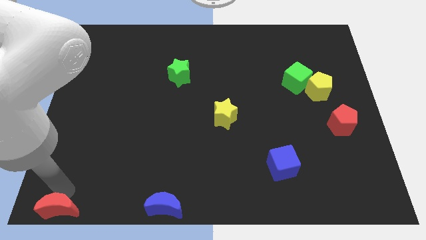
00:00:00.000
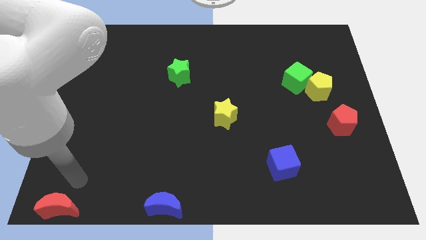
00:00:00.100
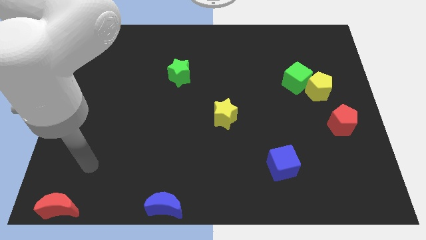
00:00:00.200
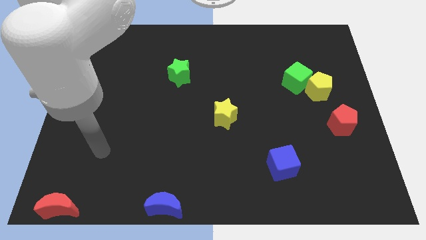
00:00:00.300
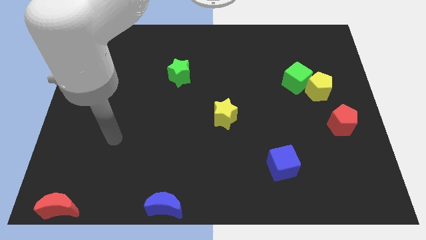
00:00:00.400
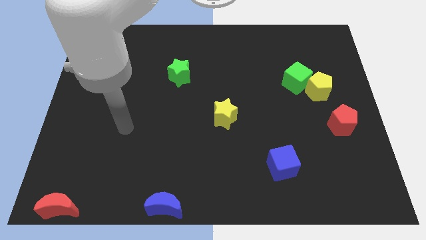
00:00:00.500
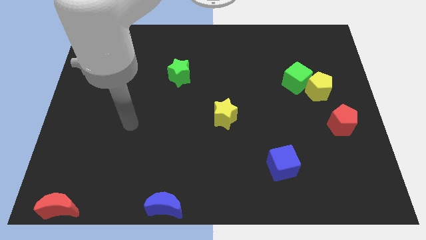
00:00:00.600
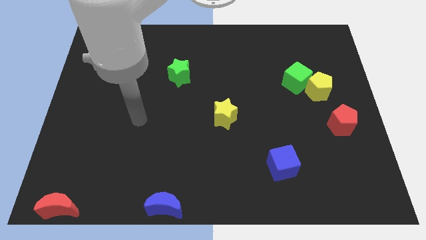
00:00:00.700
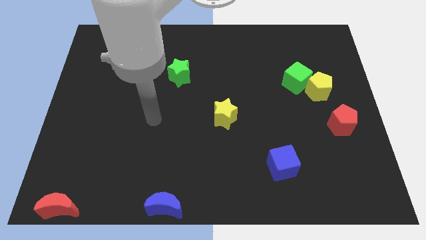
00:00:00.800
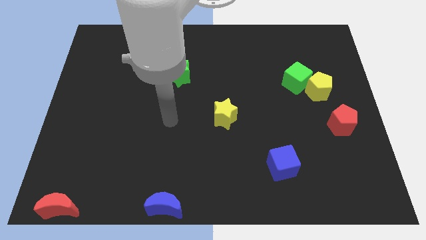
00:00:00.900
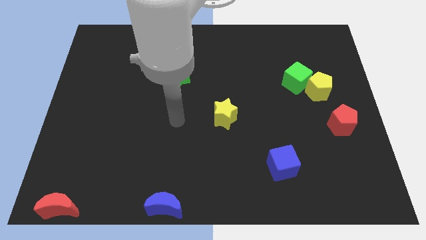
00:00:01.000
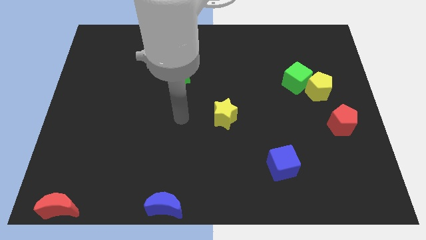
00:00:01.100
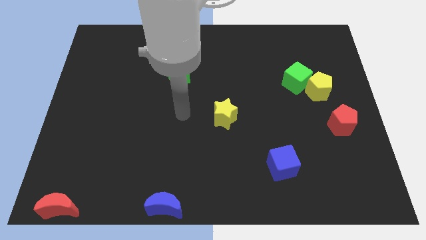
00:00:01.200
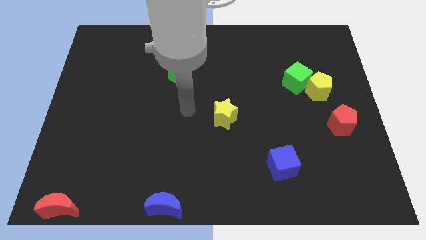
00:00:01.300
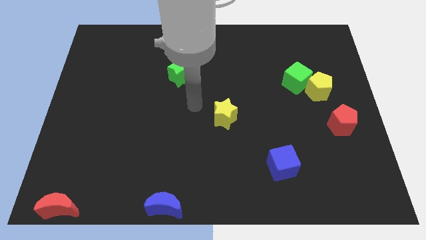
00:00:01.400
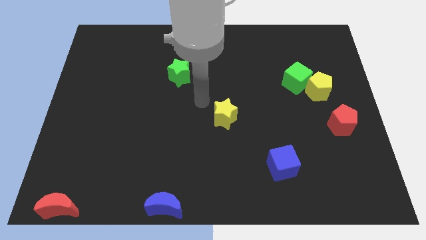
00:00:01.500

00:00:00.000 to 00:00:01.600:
place your arm in between the green star and yellow star

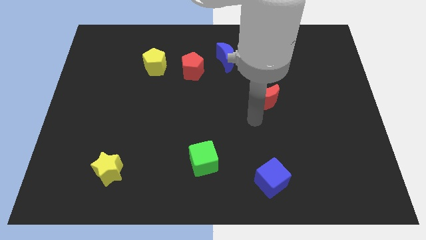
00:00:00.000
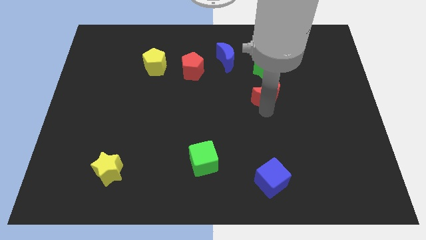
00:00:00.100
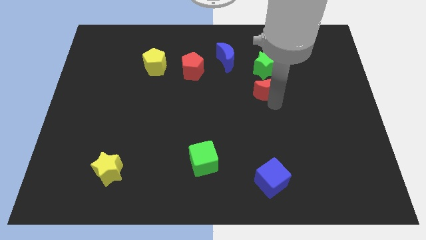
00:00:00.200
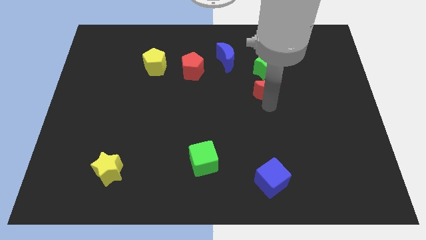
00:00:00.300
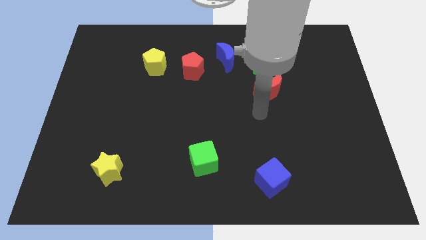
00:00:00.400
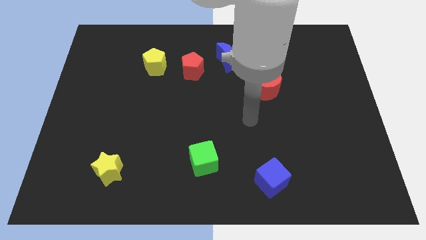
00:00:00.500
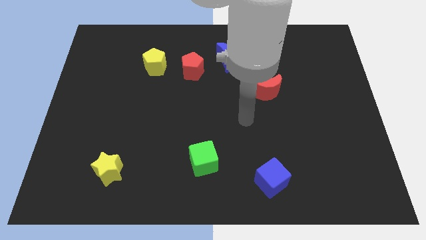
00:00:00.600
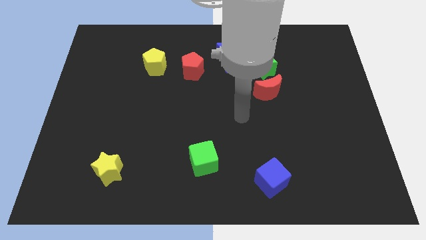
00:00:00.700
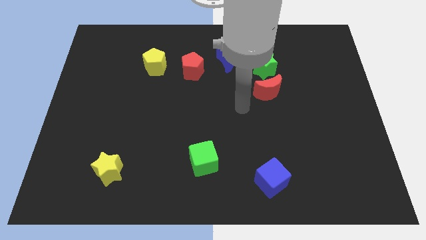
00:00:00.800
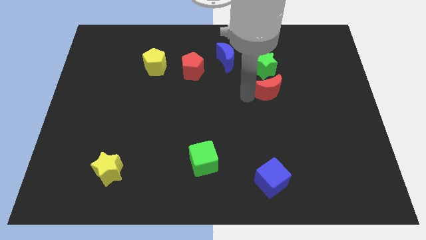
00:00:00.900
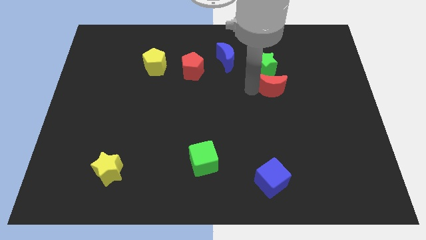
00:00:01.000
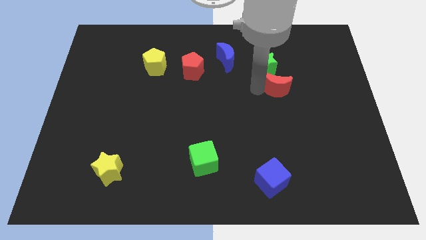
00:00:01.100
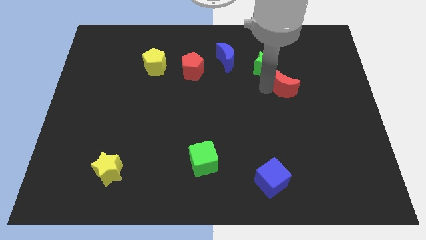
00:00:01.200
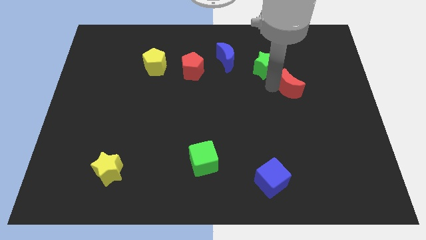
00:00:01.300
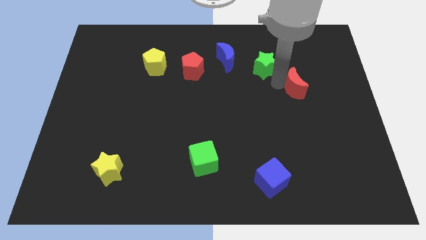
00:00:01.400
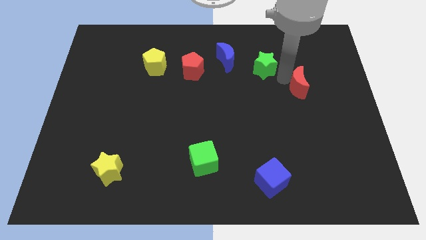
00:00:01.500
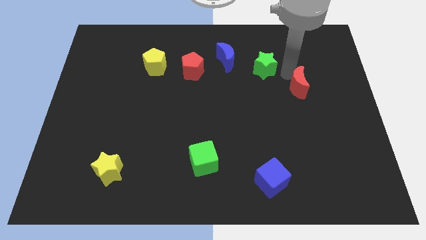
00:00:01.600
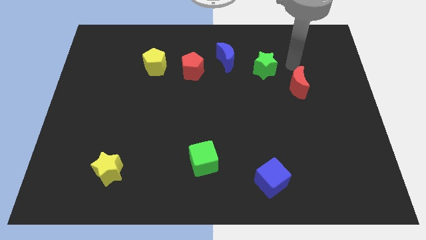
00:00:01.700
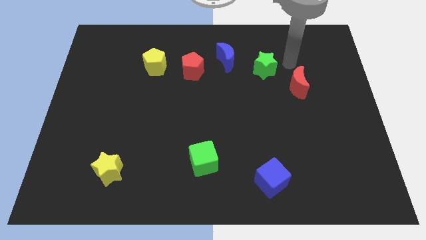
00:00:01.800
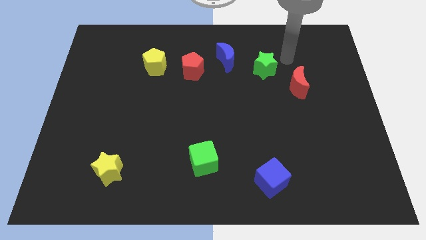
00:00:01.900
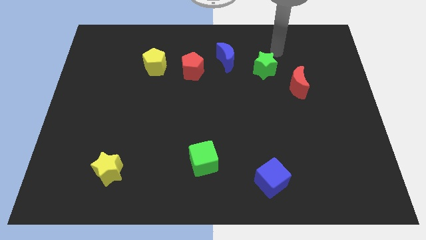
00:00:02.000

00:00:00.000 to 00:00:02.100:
push the red crescent to the right of the board

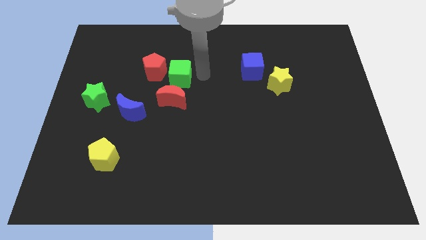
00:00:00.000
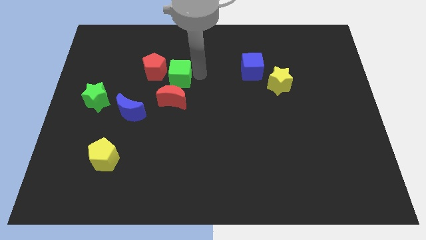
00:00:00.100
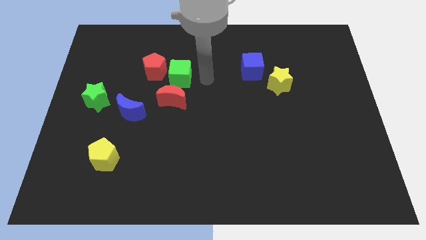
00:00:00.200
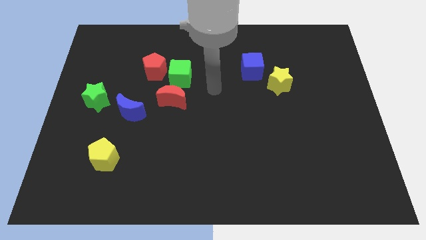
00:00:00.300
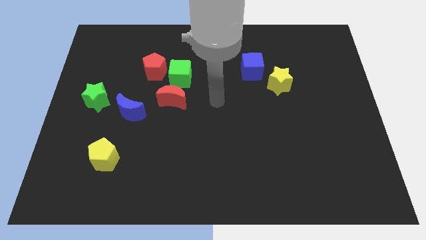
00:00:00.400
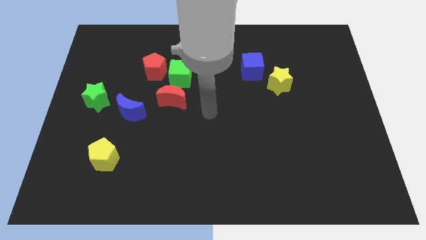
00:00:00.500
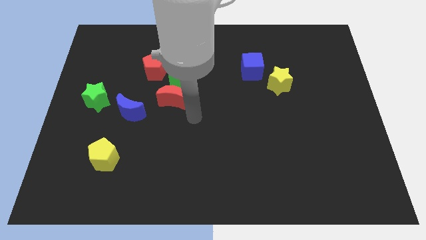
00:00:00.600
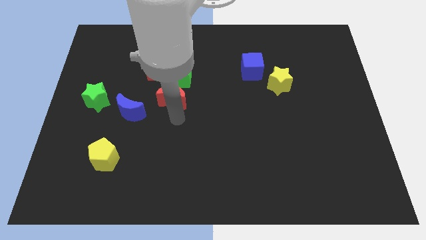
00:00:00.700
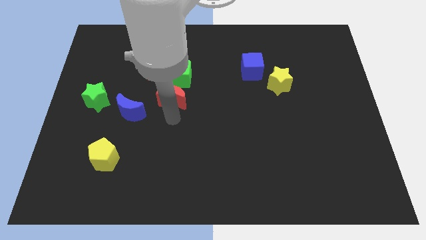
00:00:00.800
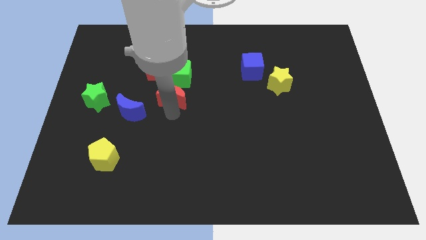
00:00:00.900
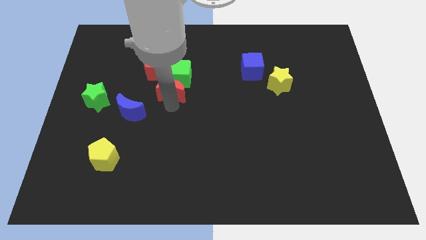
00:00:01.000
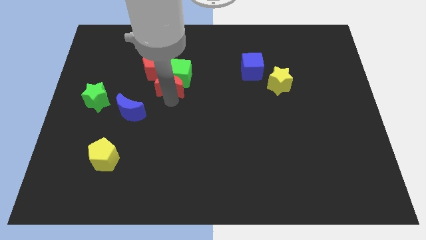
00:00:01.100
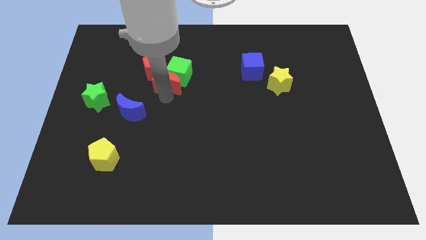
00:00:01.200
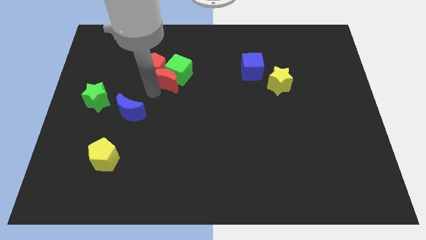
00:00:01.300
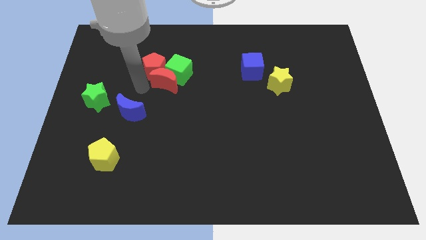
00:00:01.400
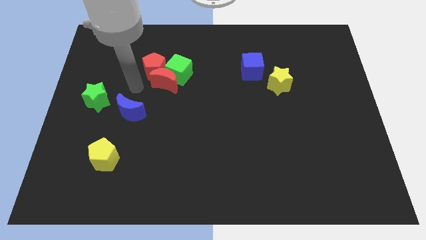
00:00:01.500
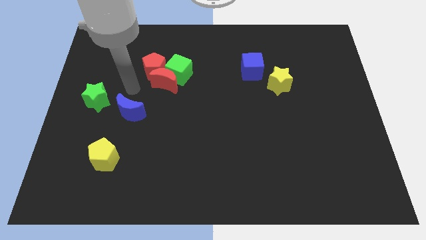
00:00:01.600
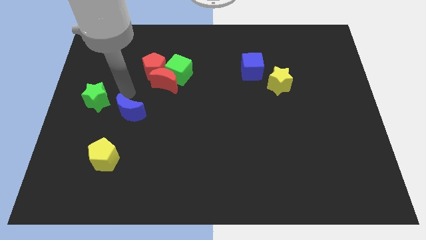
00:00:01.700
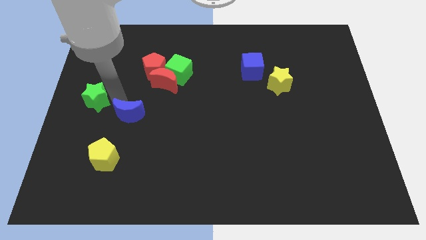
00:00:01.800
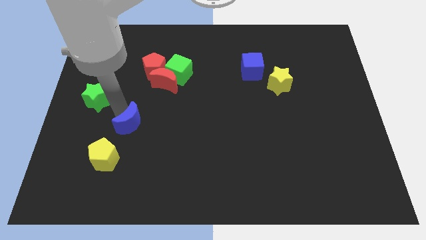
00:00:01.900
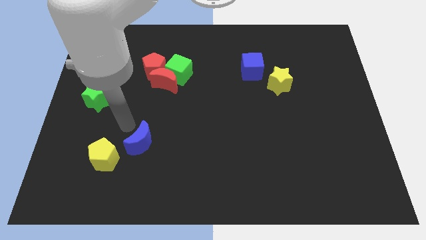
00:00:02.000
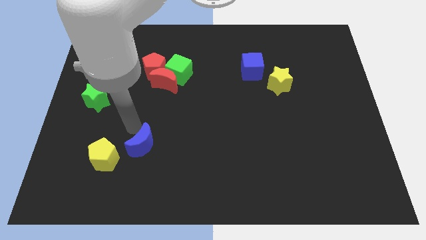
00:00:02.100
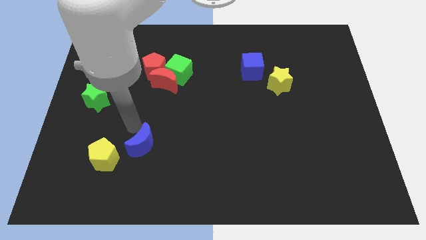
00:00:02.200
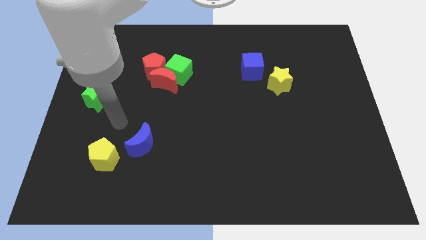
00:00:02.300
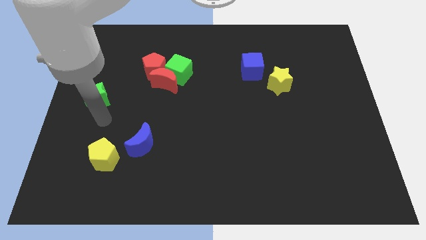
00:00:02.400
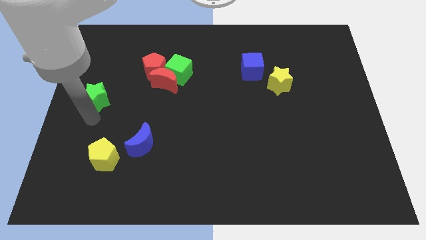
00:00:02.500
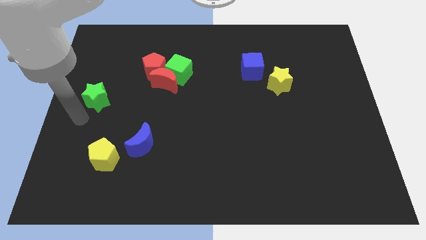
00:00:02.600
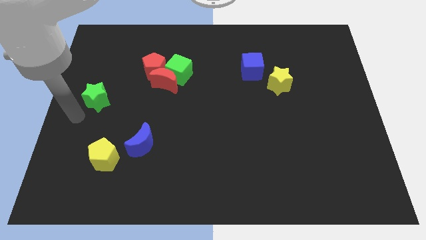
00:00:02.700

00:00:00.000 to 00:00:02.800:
separate the blue moon from a group of objects

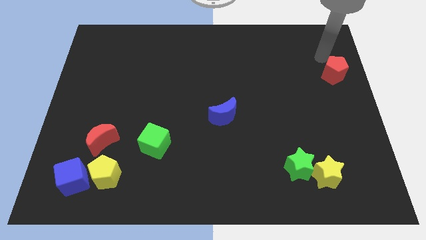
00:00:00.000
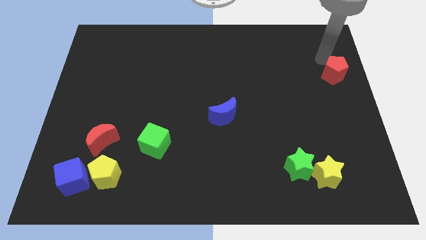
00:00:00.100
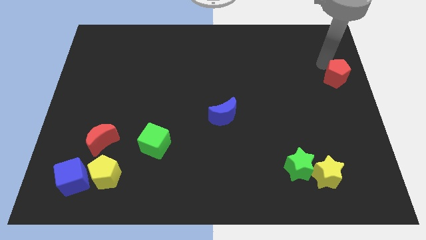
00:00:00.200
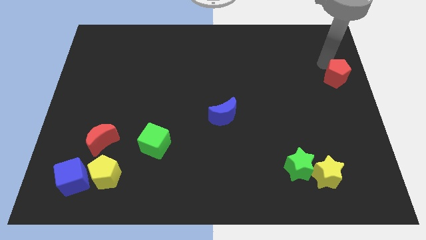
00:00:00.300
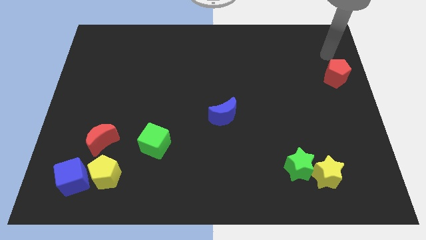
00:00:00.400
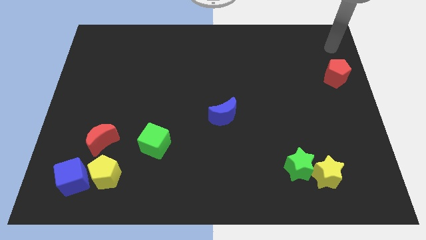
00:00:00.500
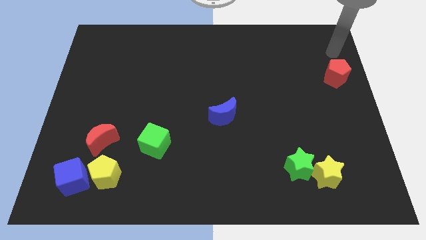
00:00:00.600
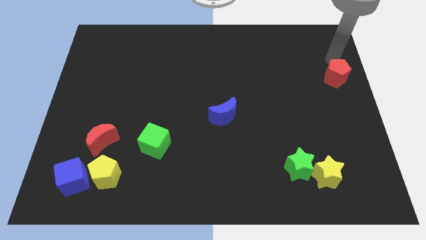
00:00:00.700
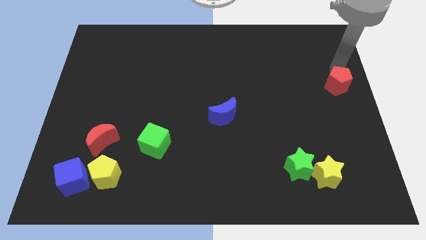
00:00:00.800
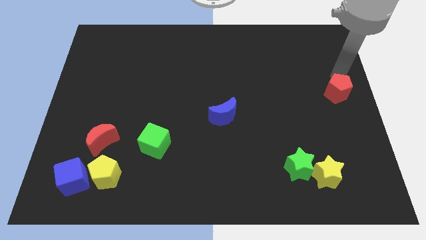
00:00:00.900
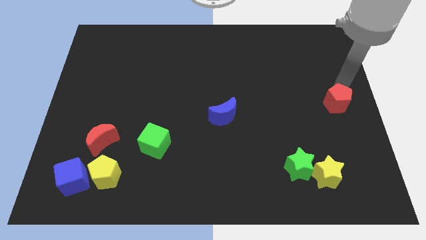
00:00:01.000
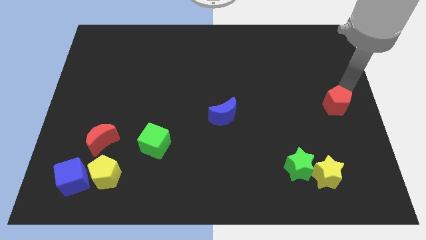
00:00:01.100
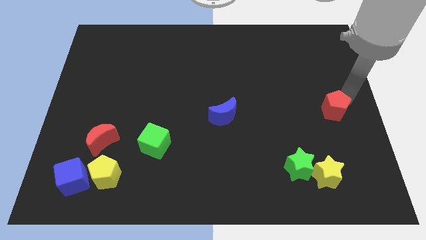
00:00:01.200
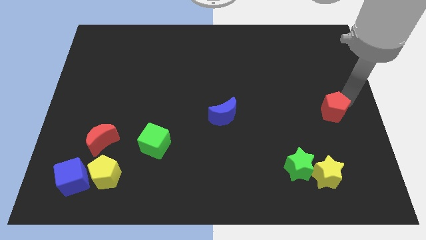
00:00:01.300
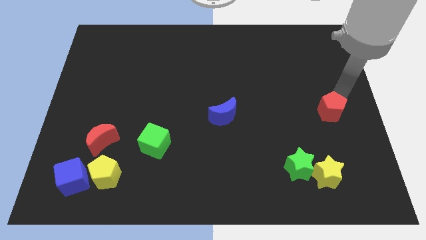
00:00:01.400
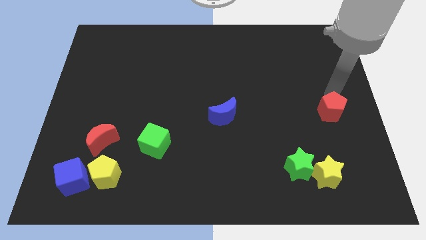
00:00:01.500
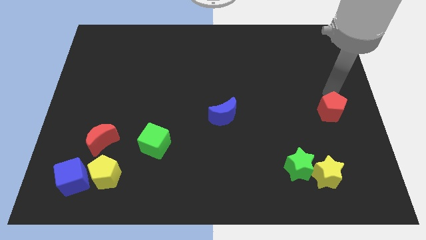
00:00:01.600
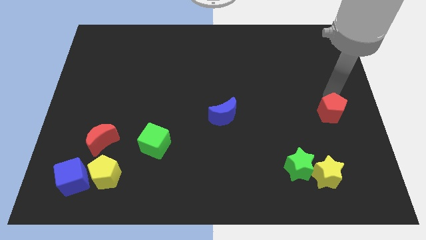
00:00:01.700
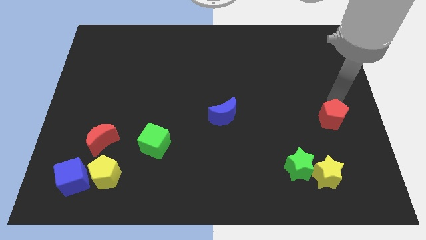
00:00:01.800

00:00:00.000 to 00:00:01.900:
place the red pentagon to the right of the blue moon

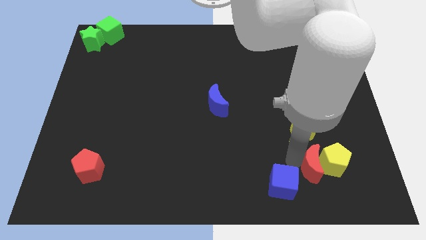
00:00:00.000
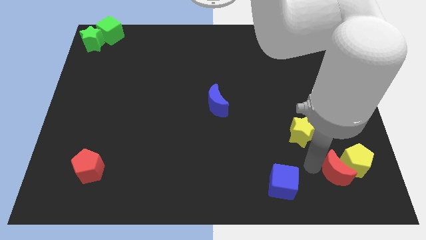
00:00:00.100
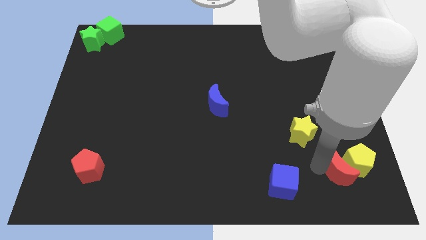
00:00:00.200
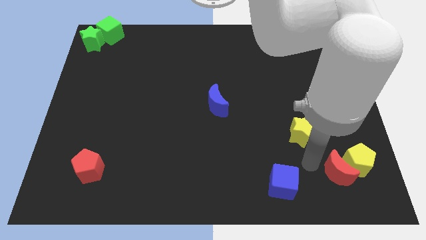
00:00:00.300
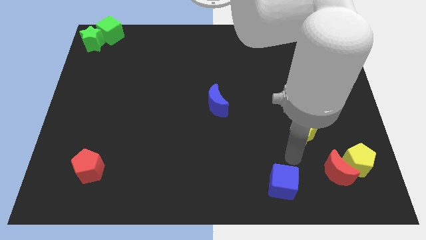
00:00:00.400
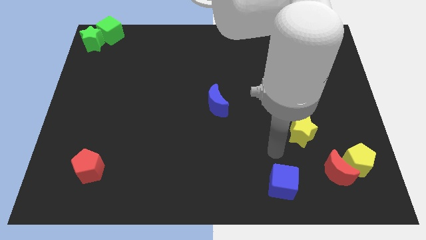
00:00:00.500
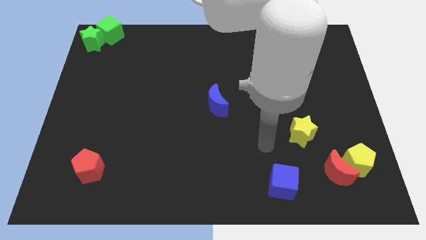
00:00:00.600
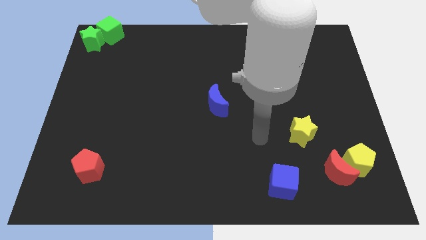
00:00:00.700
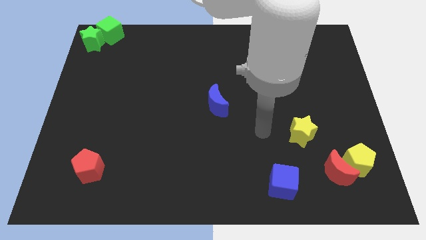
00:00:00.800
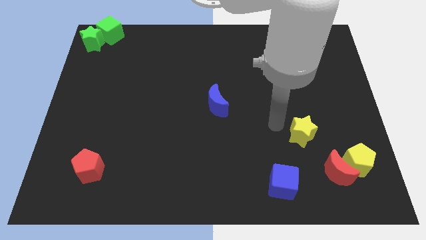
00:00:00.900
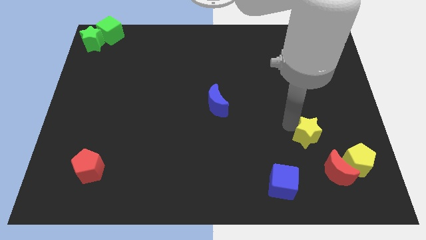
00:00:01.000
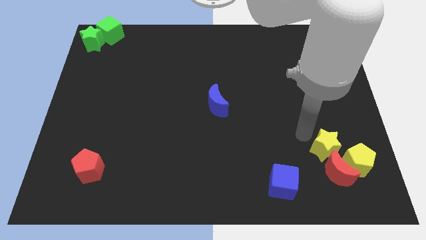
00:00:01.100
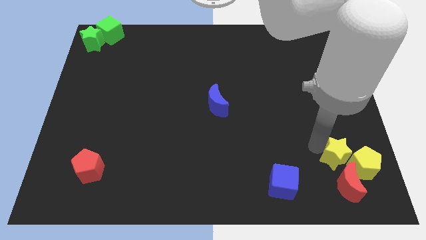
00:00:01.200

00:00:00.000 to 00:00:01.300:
push the yellow star into yellow pentagon
